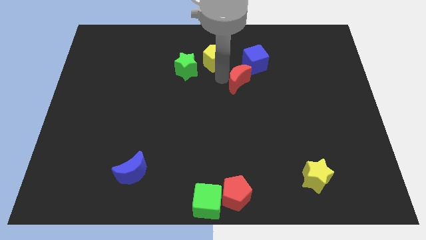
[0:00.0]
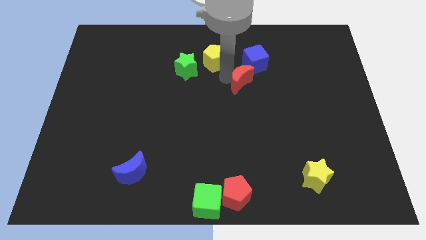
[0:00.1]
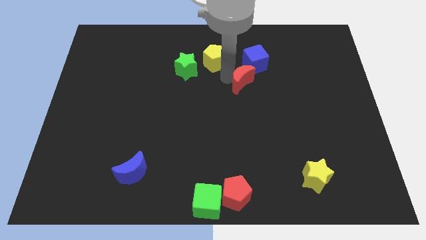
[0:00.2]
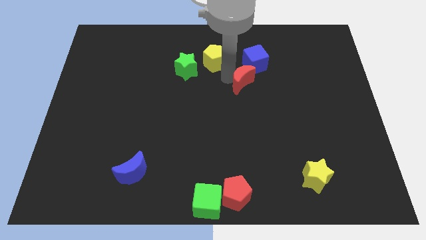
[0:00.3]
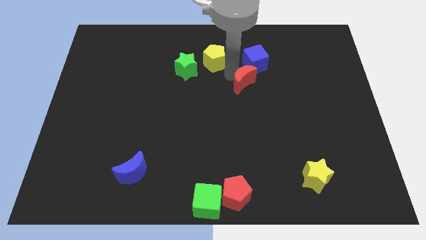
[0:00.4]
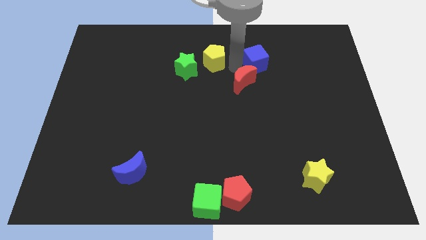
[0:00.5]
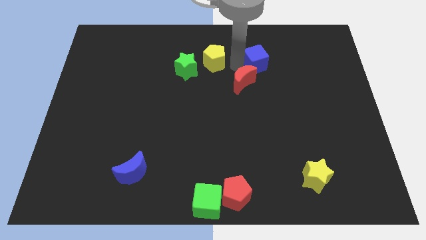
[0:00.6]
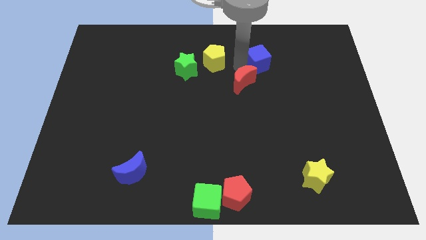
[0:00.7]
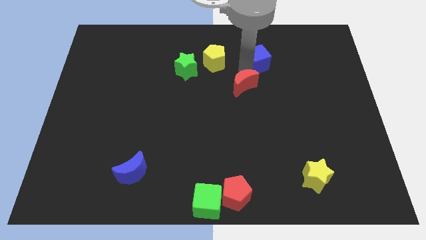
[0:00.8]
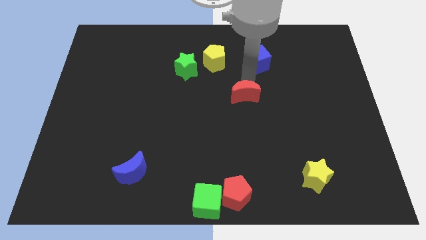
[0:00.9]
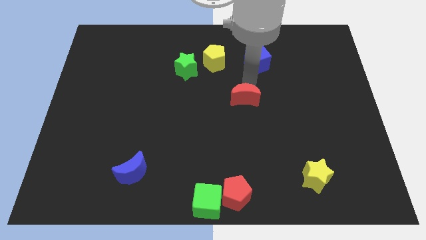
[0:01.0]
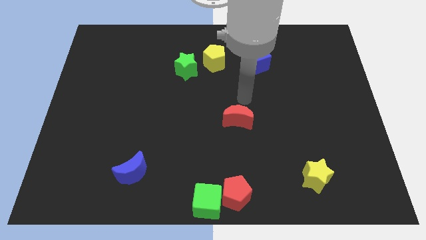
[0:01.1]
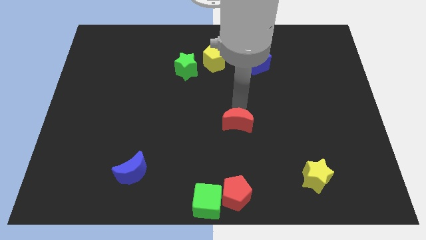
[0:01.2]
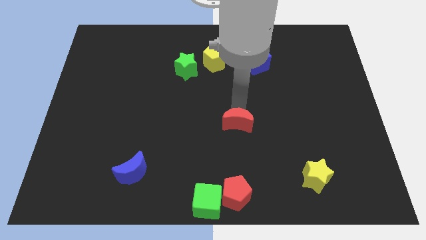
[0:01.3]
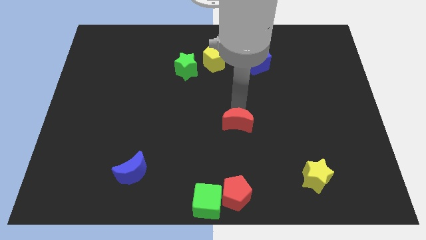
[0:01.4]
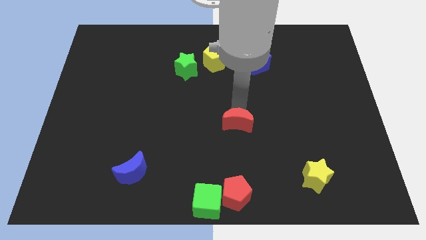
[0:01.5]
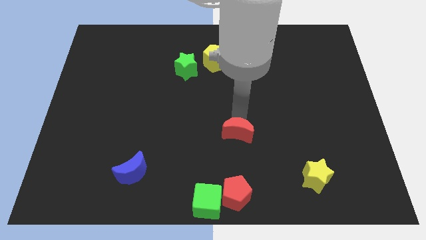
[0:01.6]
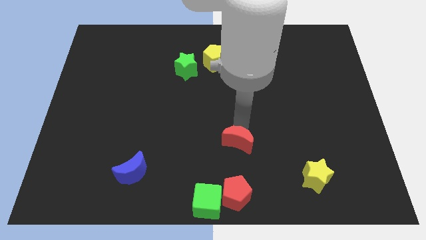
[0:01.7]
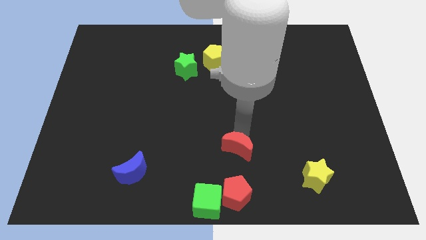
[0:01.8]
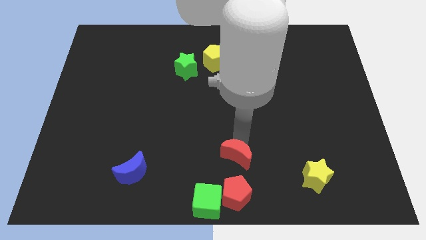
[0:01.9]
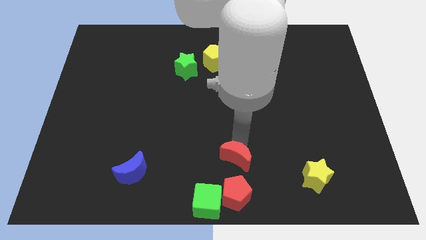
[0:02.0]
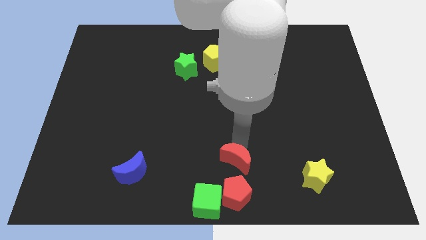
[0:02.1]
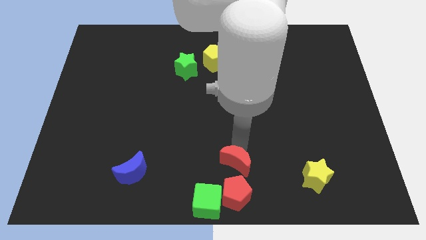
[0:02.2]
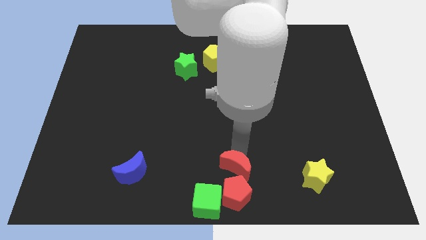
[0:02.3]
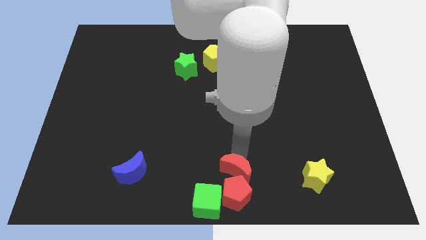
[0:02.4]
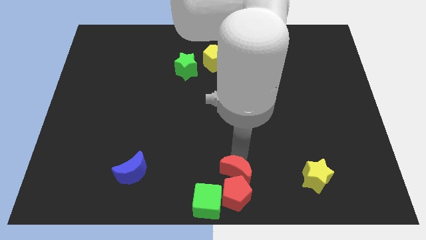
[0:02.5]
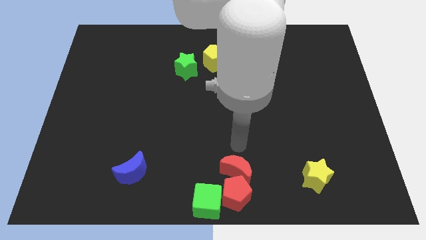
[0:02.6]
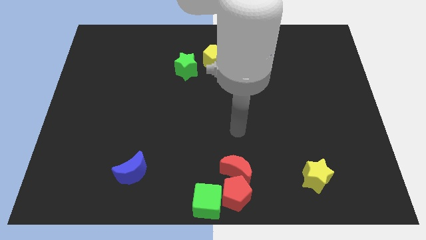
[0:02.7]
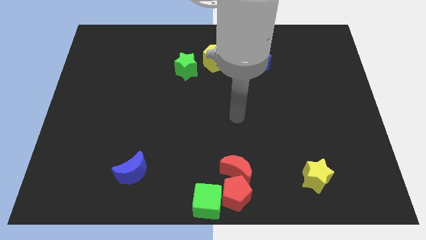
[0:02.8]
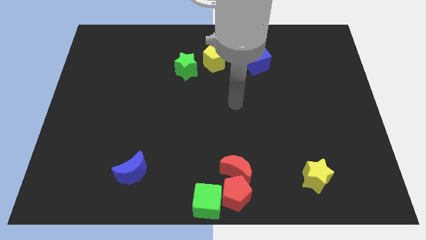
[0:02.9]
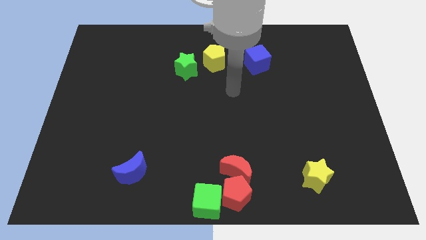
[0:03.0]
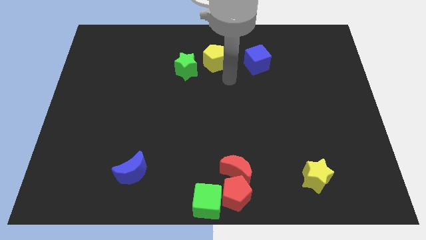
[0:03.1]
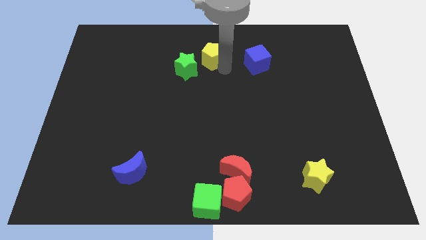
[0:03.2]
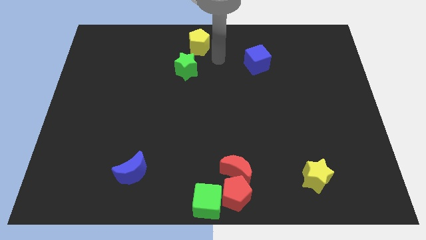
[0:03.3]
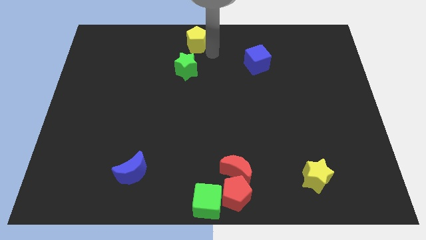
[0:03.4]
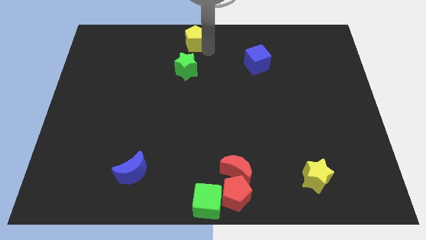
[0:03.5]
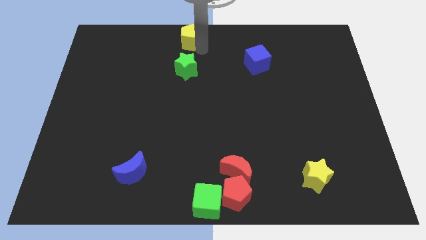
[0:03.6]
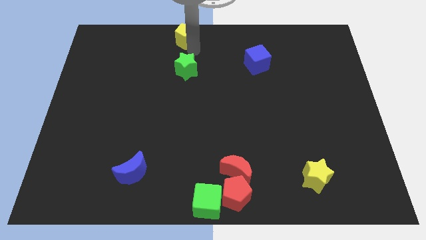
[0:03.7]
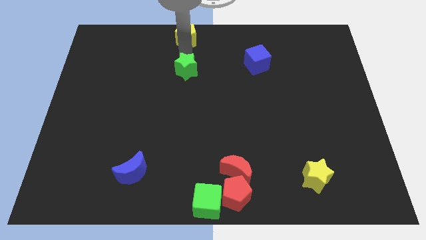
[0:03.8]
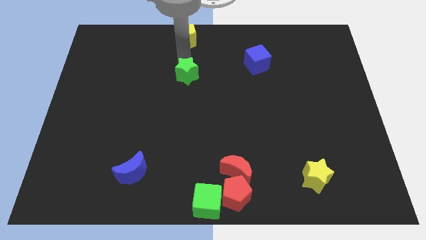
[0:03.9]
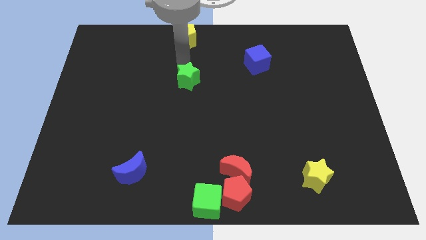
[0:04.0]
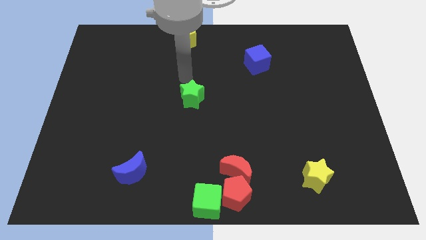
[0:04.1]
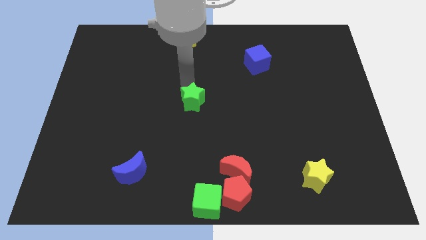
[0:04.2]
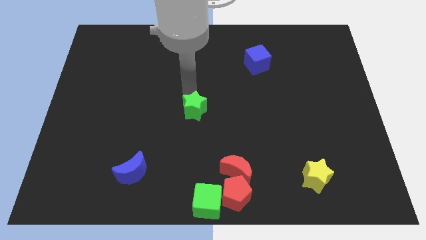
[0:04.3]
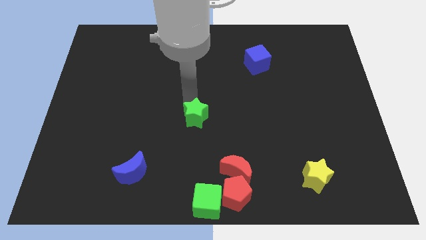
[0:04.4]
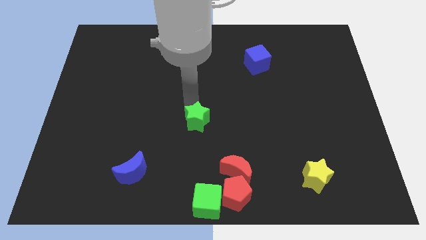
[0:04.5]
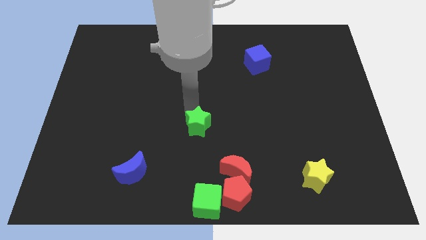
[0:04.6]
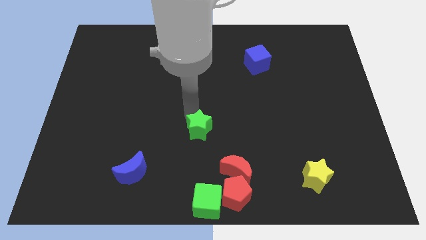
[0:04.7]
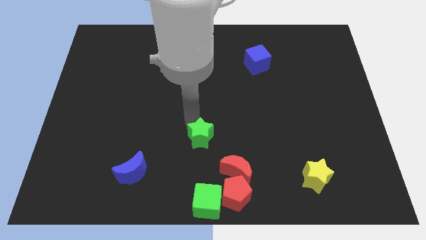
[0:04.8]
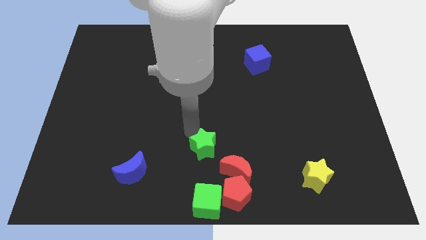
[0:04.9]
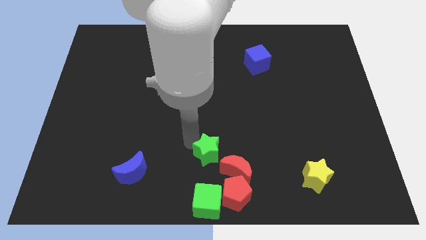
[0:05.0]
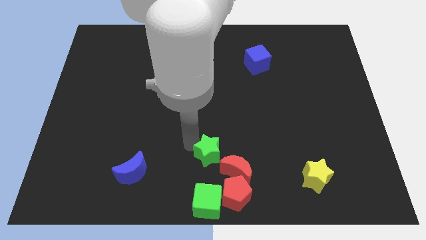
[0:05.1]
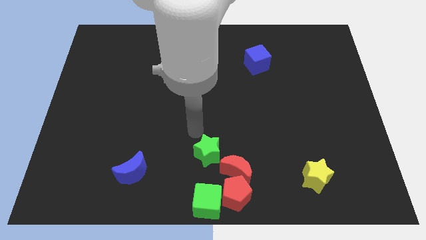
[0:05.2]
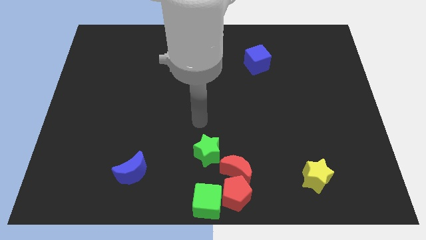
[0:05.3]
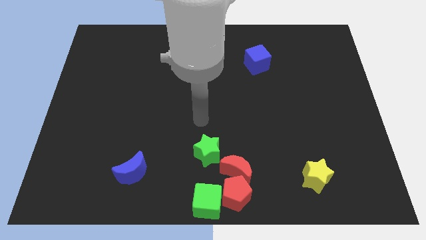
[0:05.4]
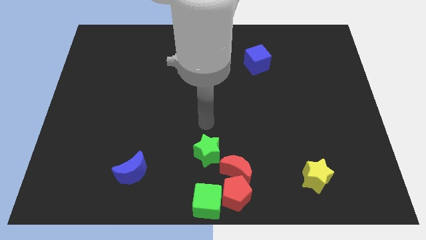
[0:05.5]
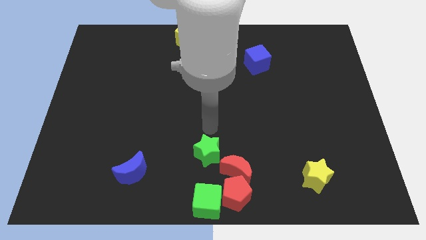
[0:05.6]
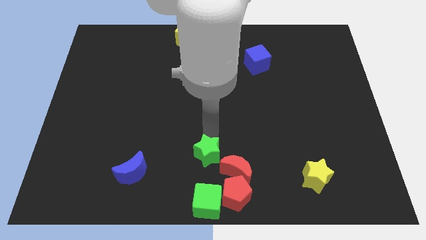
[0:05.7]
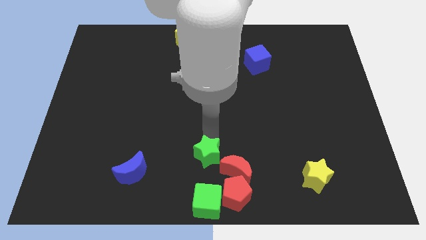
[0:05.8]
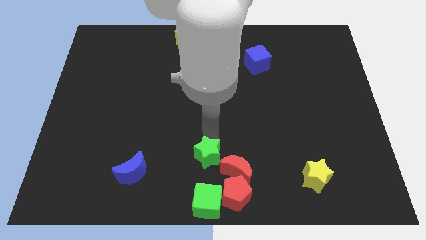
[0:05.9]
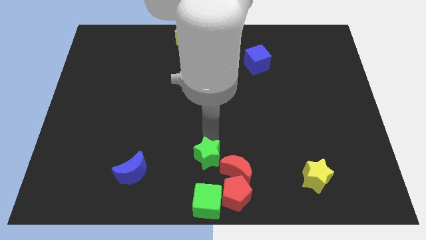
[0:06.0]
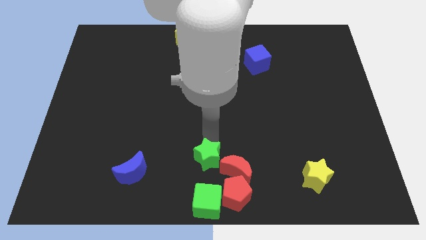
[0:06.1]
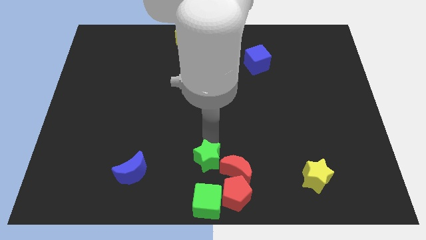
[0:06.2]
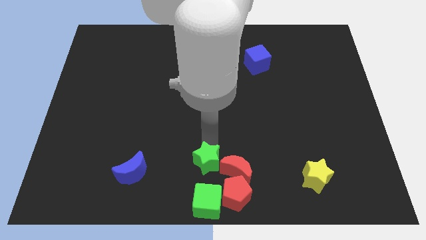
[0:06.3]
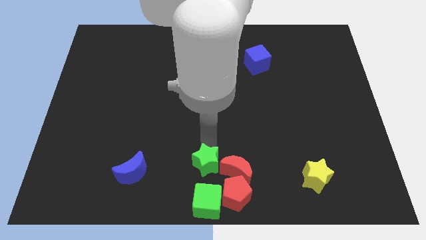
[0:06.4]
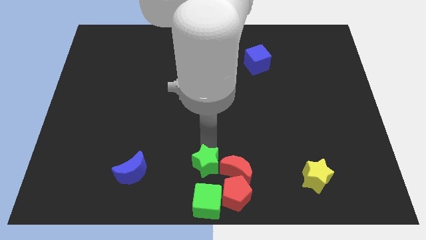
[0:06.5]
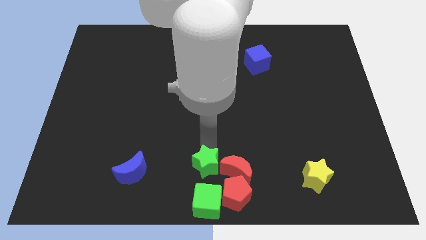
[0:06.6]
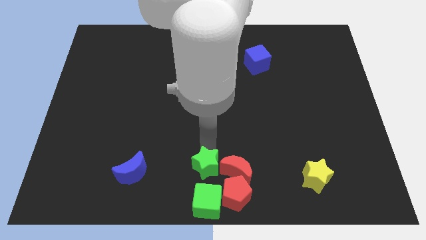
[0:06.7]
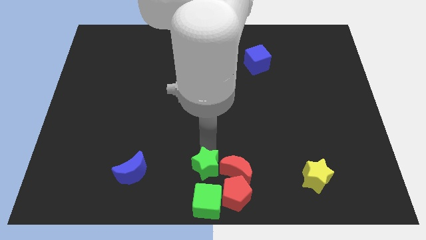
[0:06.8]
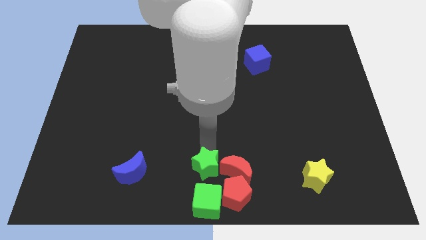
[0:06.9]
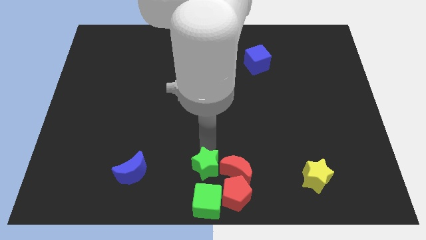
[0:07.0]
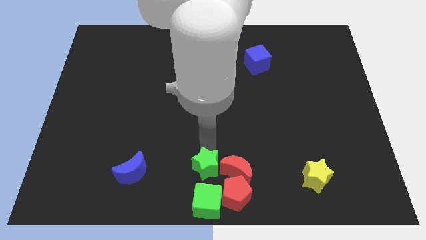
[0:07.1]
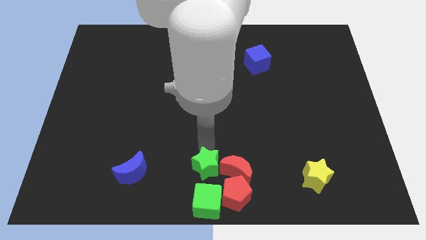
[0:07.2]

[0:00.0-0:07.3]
place red moon and the green star at the bottom center

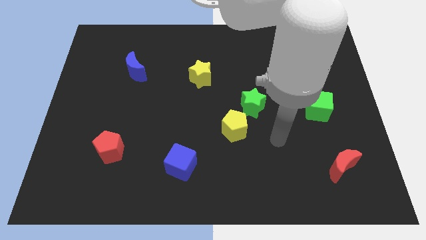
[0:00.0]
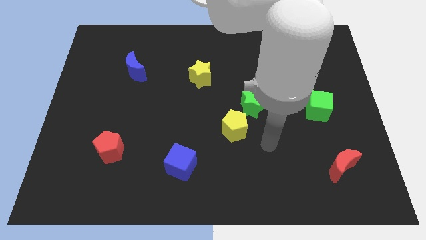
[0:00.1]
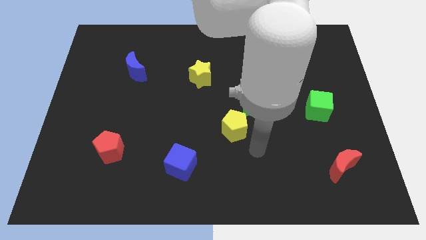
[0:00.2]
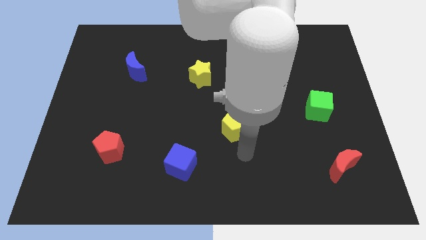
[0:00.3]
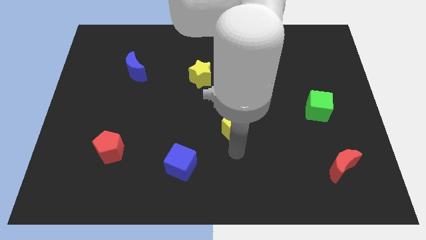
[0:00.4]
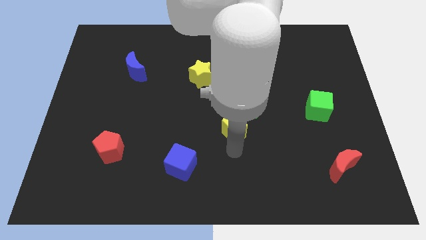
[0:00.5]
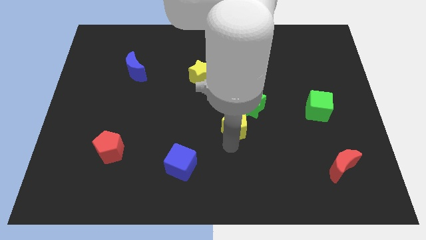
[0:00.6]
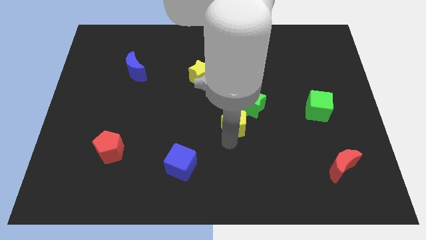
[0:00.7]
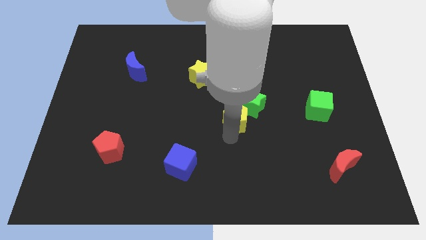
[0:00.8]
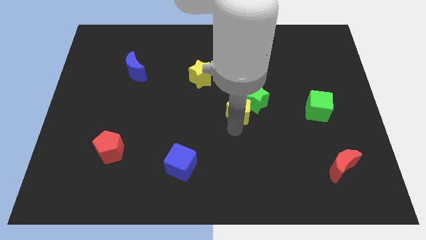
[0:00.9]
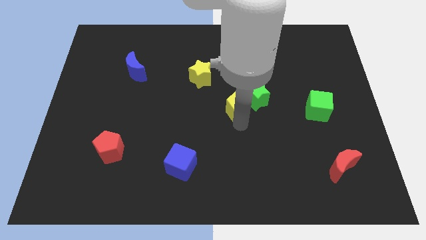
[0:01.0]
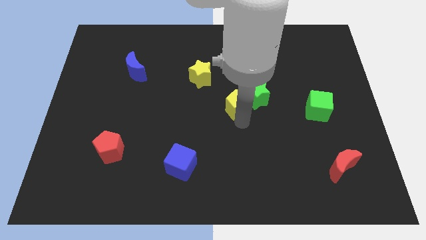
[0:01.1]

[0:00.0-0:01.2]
push yellow pentagon into green star

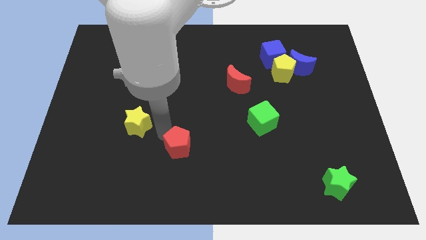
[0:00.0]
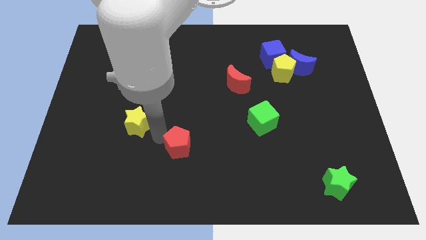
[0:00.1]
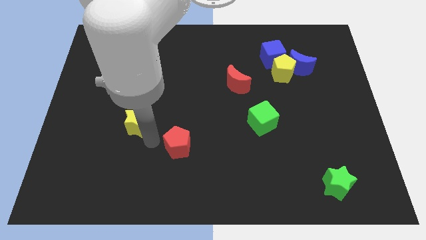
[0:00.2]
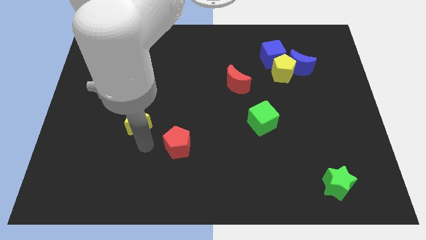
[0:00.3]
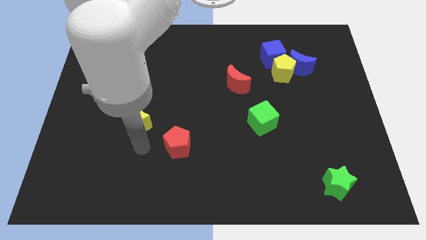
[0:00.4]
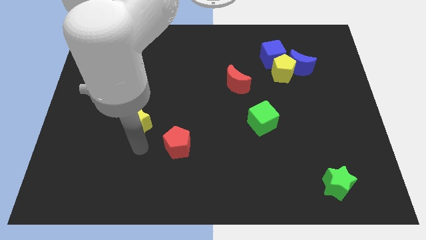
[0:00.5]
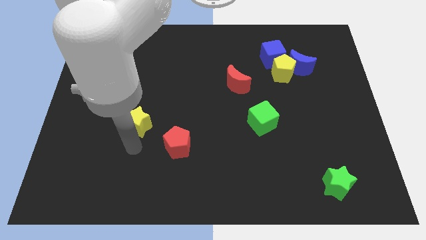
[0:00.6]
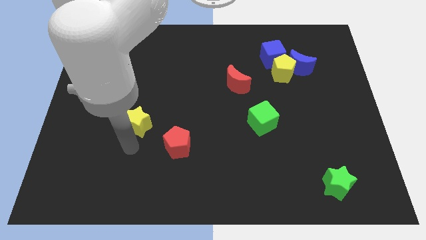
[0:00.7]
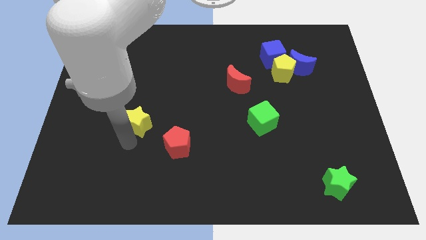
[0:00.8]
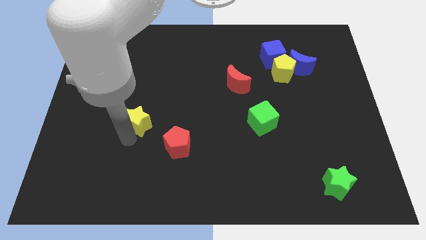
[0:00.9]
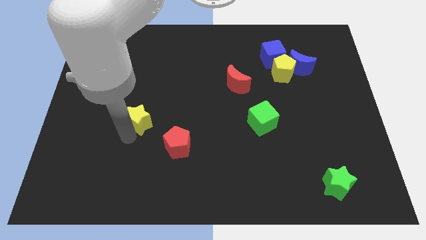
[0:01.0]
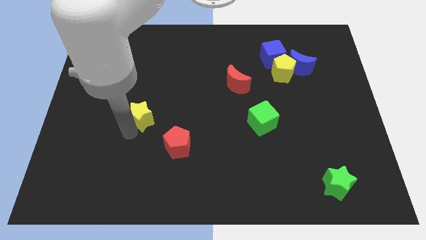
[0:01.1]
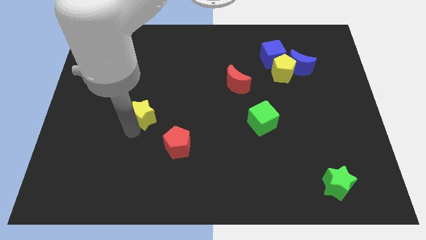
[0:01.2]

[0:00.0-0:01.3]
push the yellow pentagon slightly to the top
